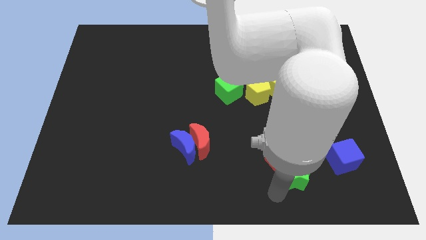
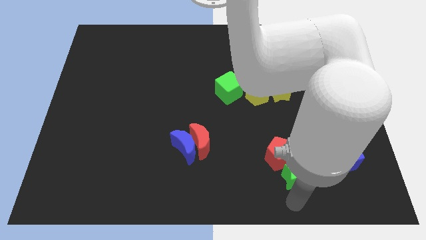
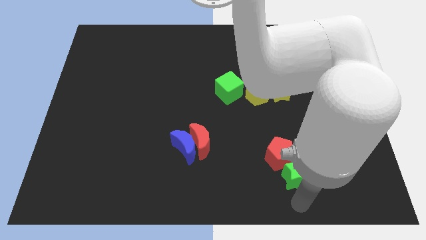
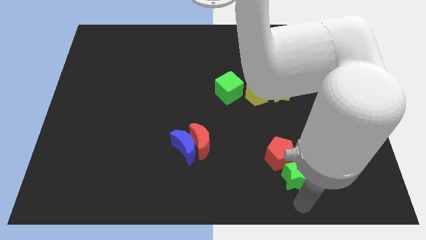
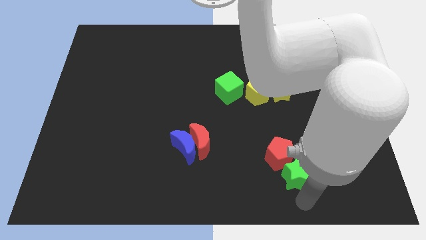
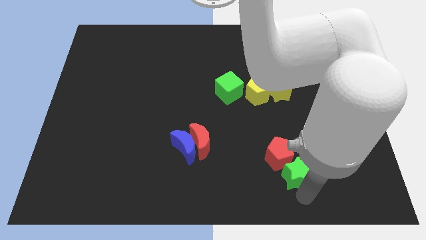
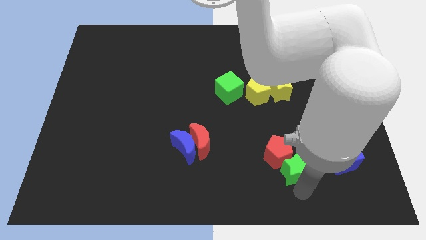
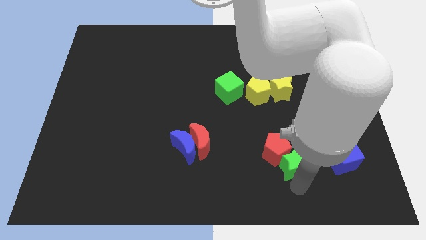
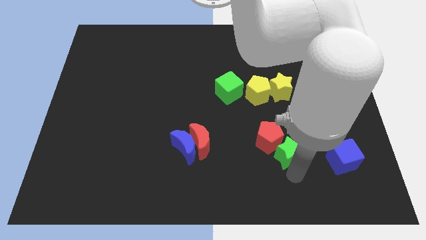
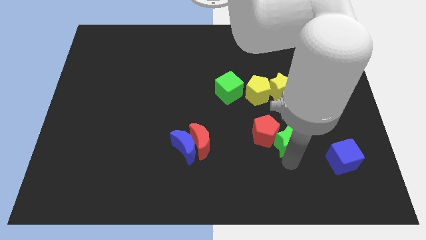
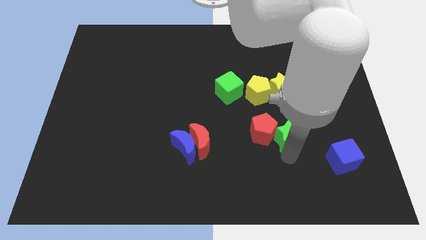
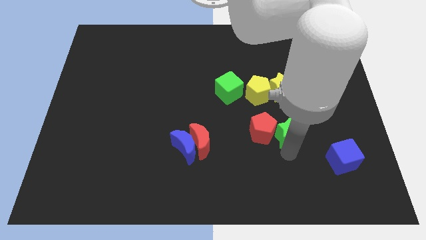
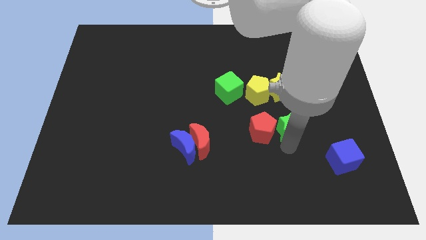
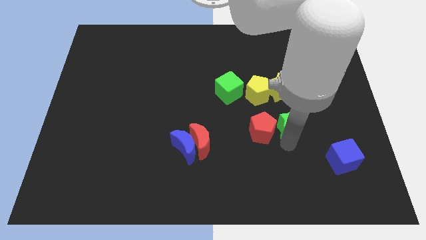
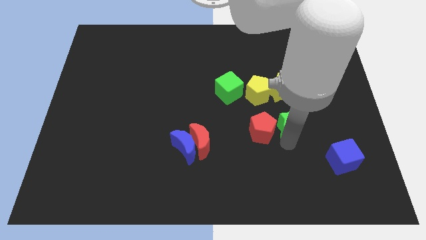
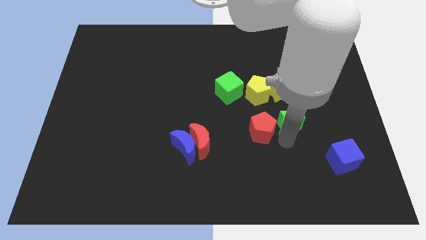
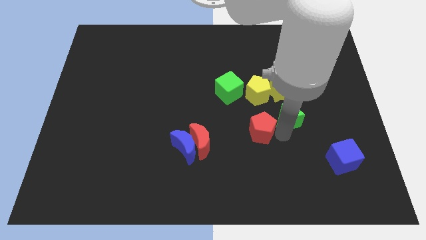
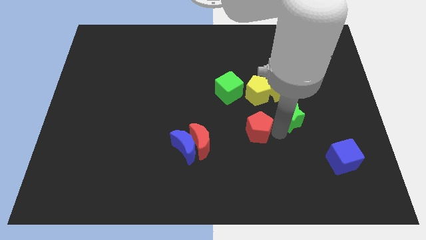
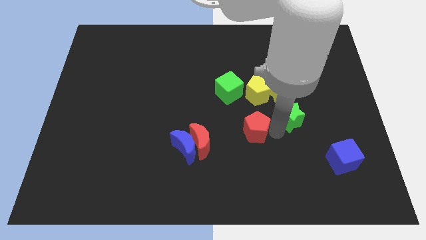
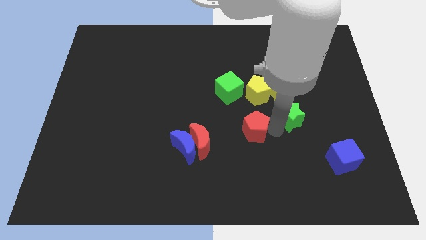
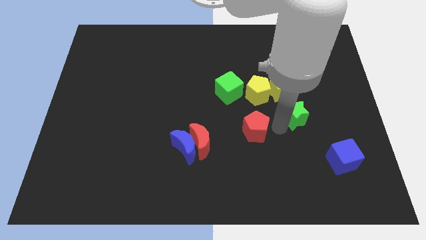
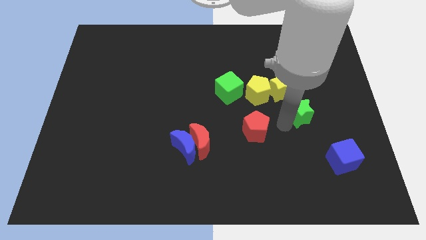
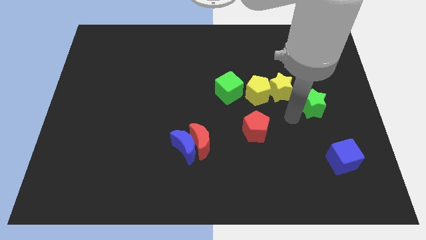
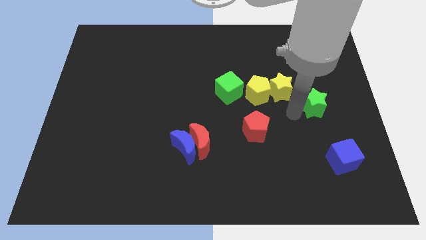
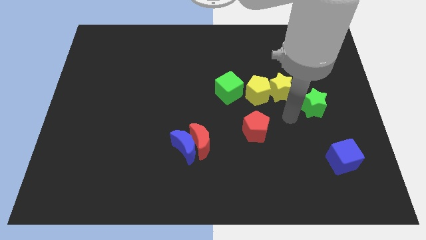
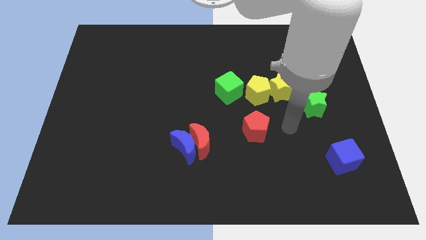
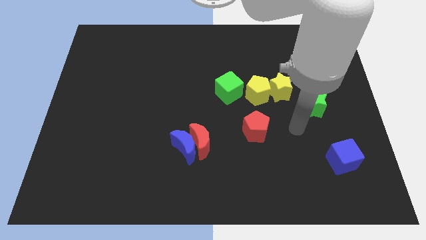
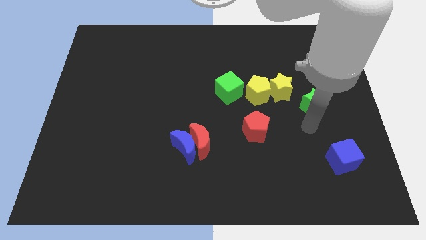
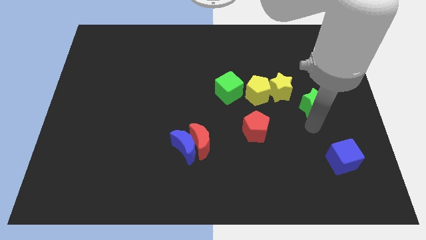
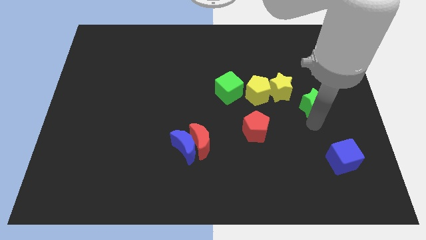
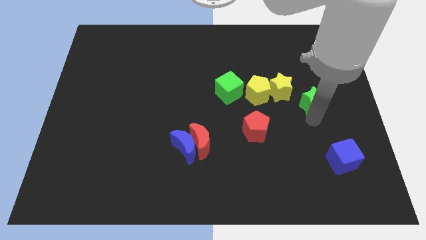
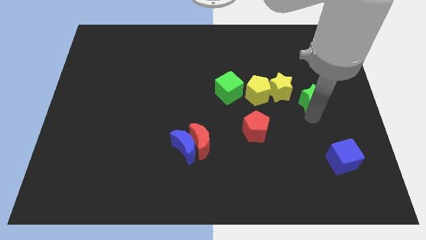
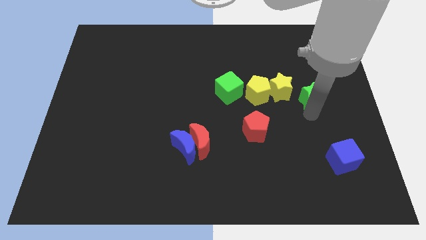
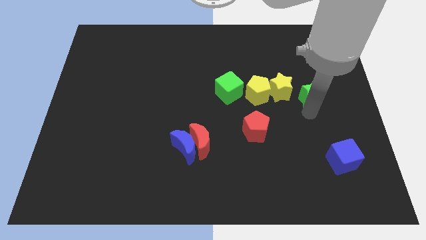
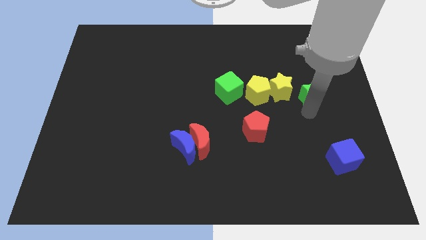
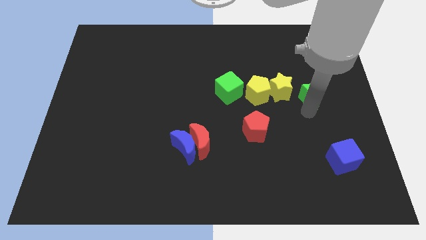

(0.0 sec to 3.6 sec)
place the green star diagonally top right to red pentagon

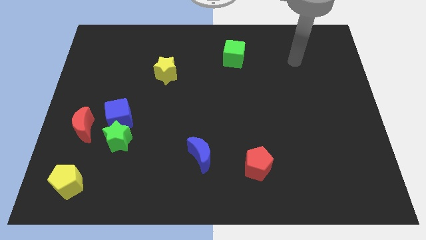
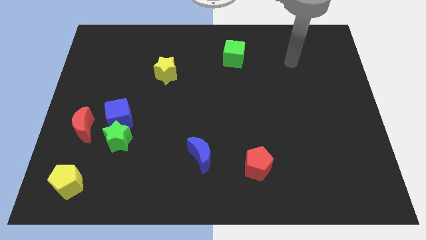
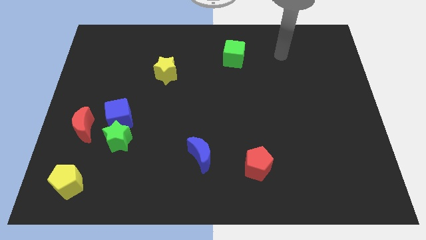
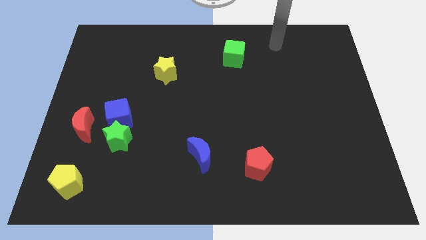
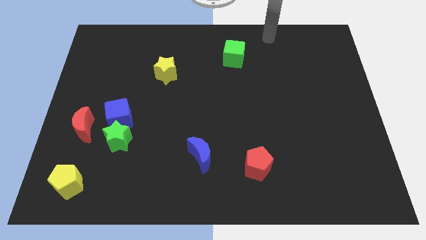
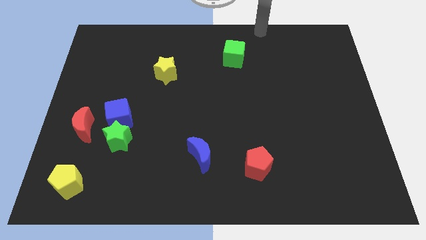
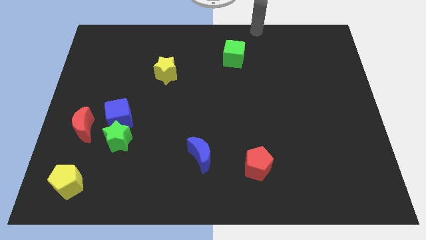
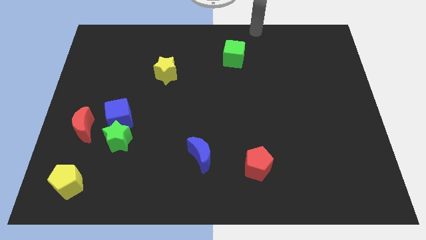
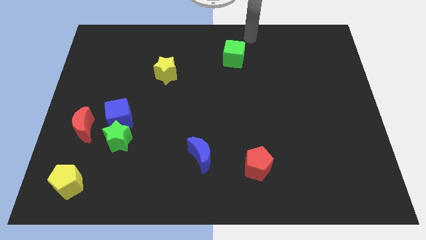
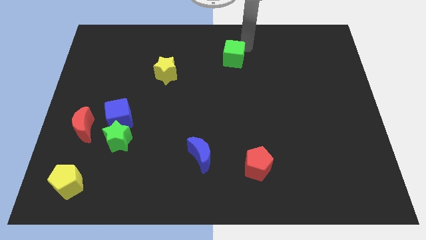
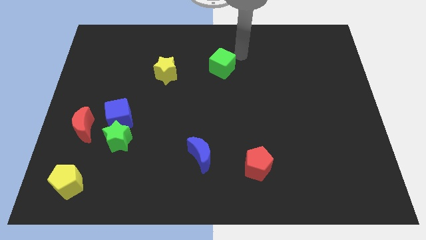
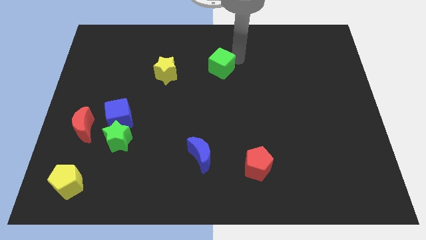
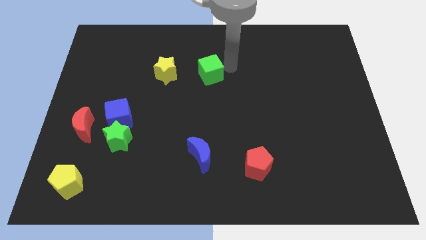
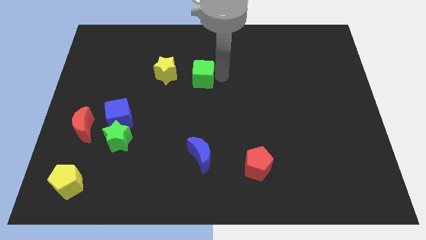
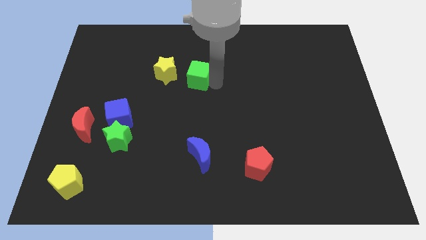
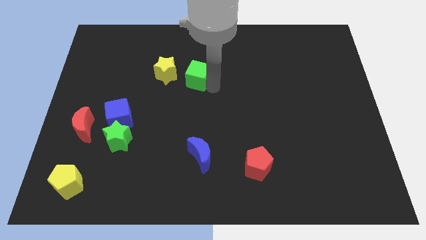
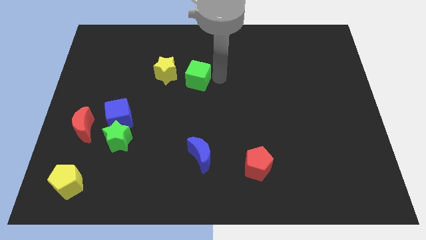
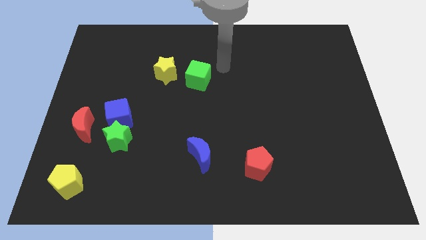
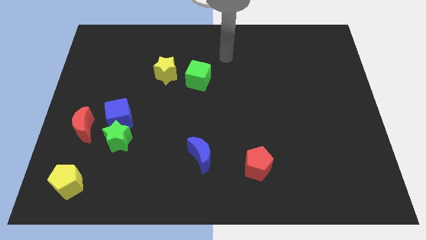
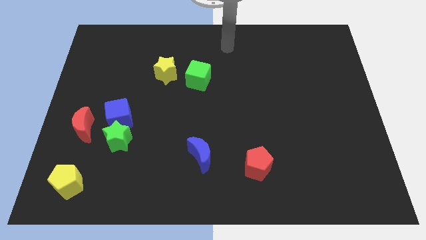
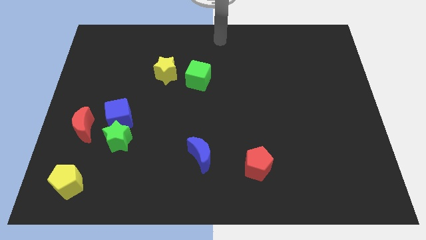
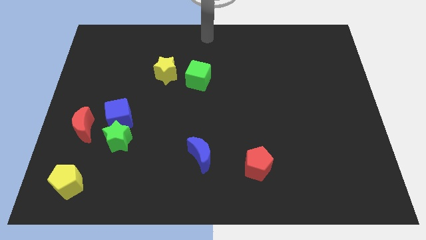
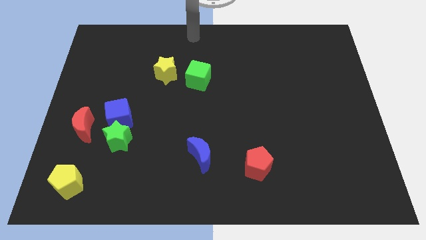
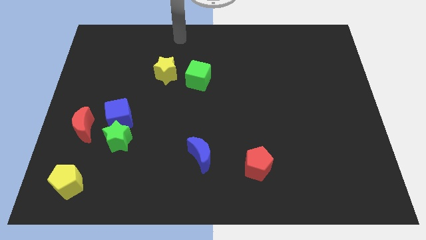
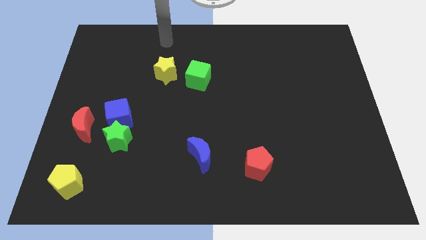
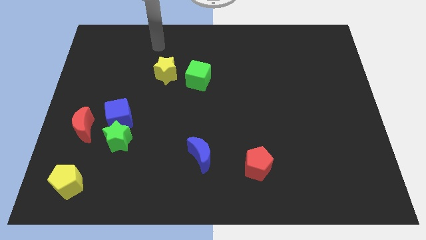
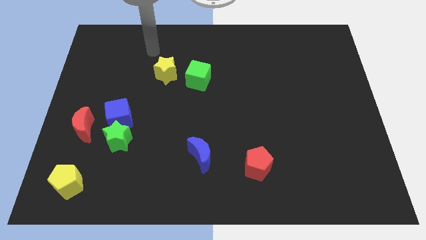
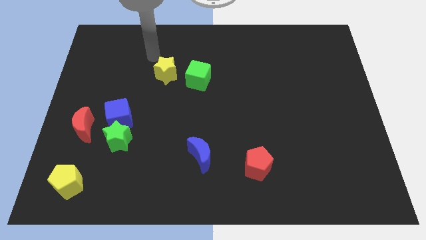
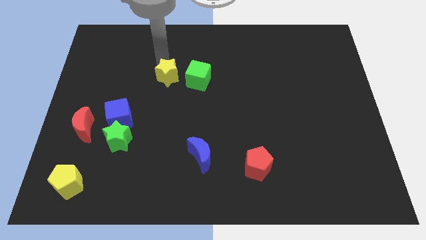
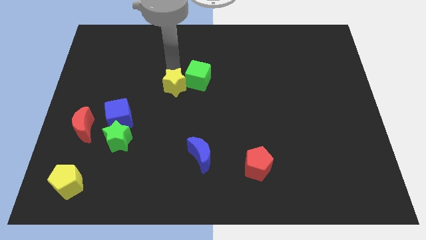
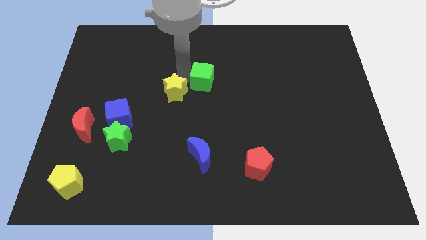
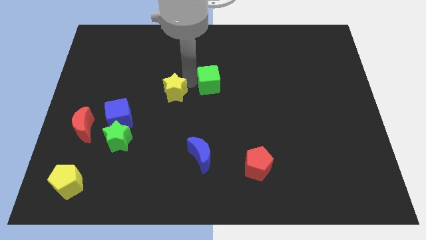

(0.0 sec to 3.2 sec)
move the green cube and the yellow star towards the center of the board

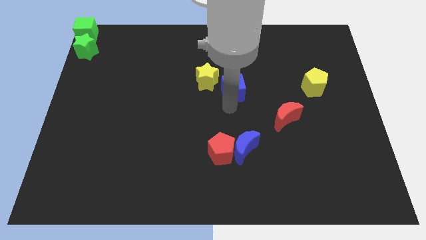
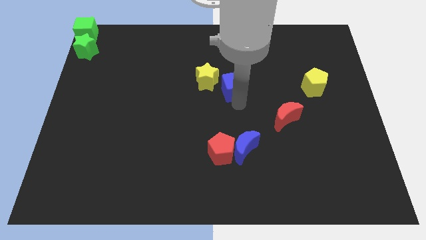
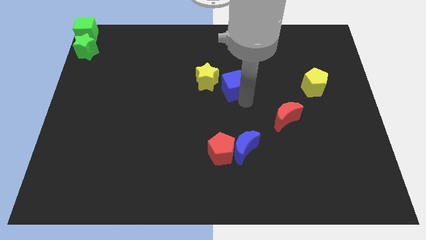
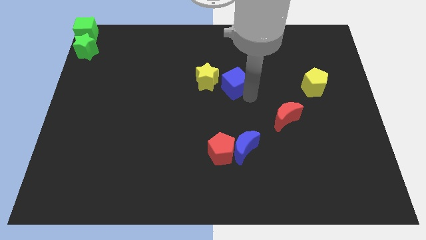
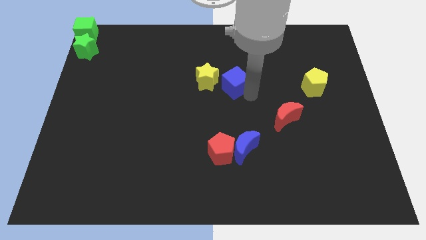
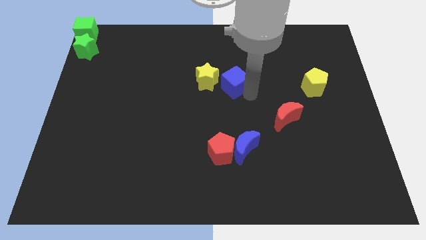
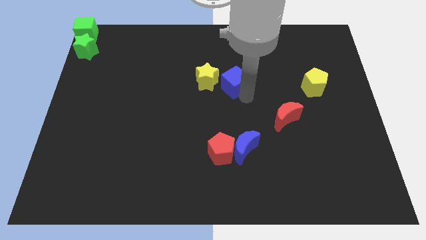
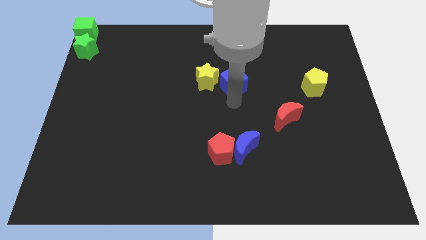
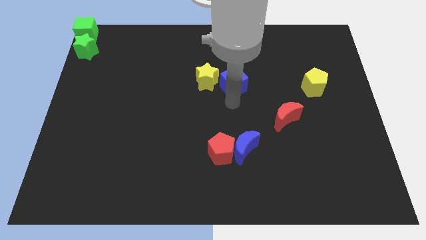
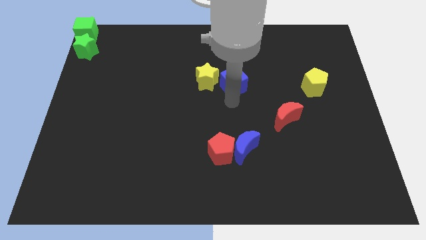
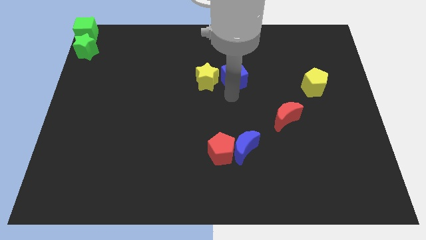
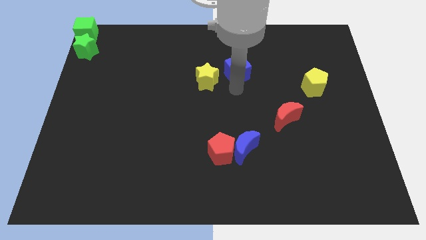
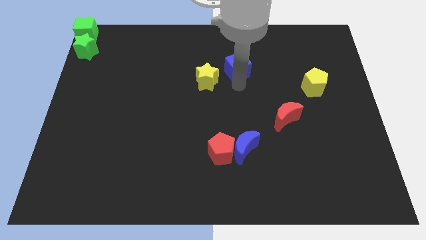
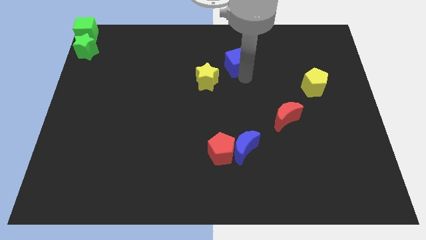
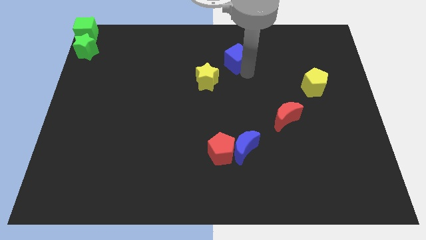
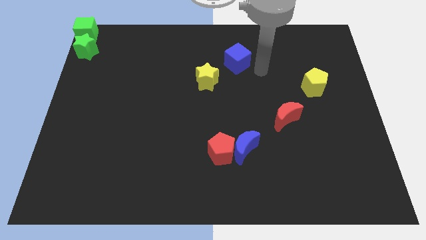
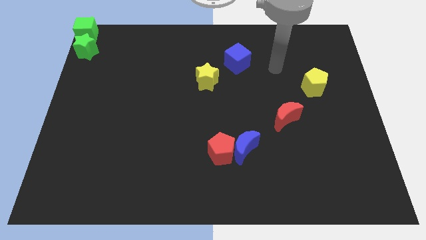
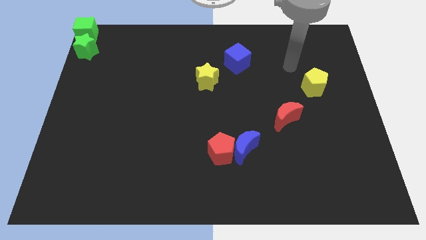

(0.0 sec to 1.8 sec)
push the blue cube up slightly towards the top center

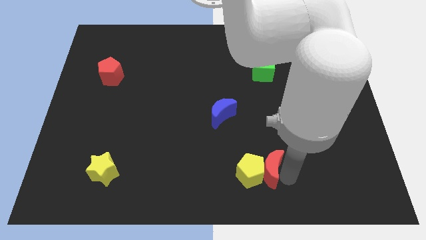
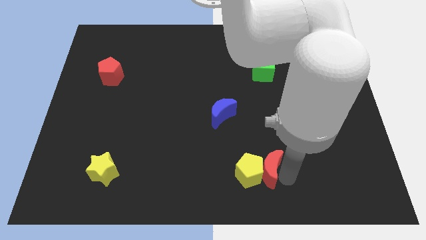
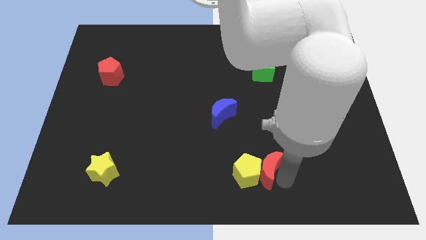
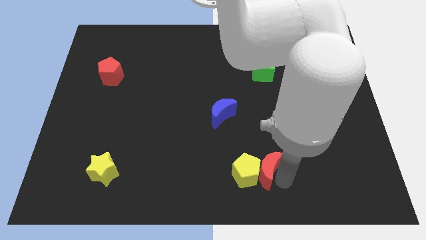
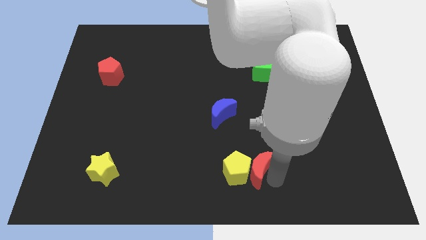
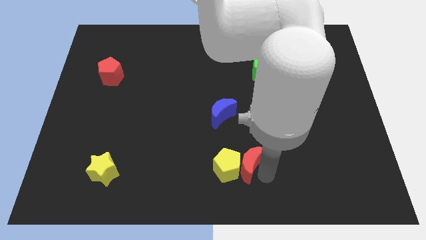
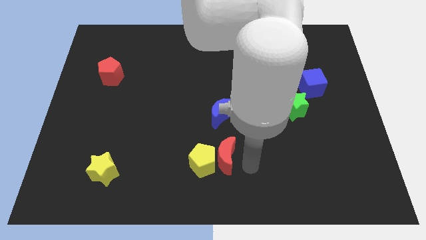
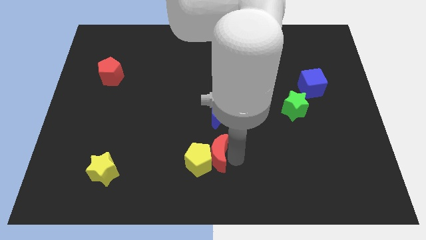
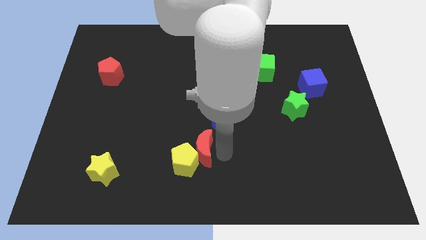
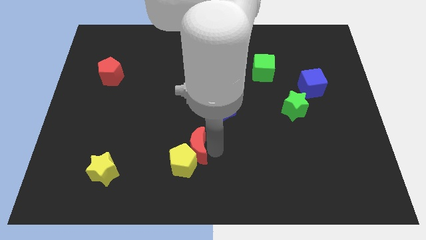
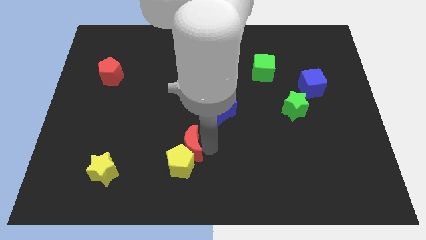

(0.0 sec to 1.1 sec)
push red moon along with yellow pentagon to the left
